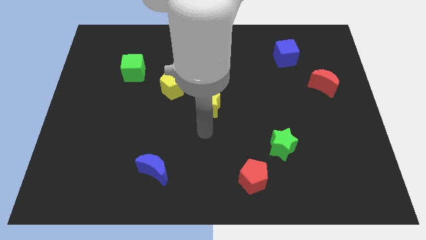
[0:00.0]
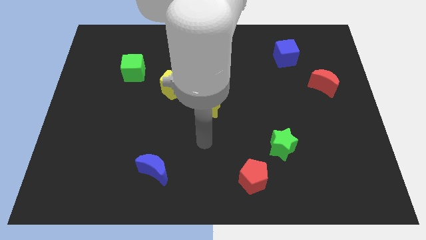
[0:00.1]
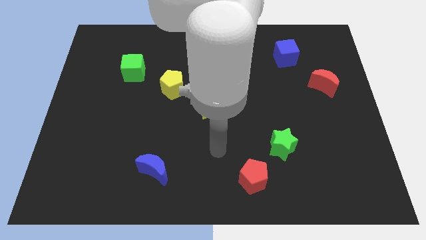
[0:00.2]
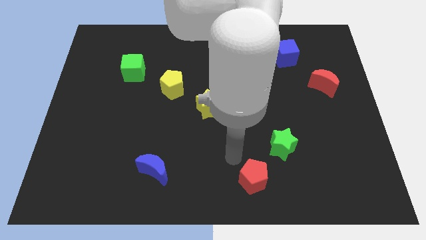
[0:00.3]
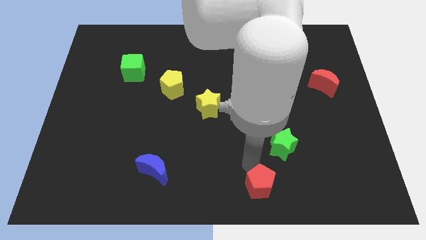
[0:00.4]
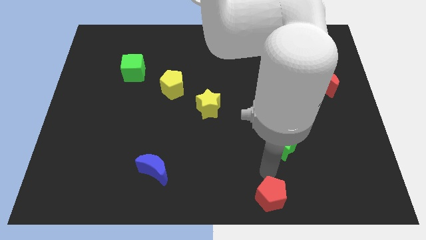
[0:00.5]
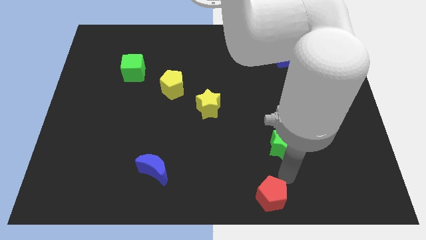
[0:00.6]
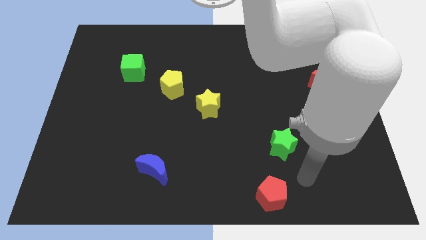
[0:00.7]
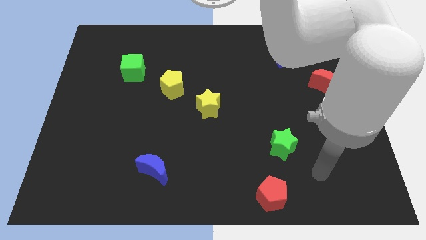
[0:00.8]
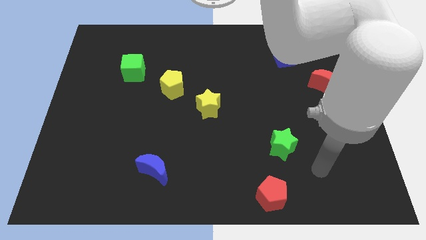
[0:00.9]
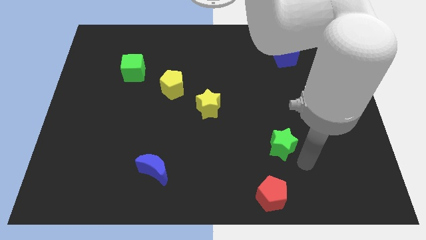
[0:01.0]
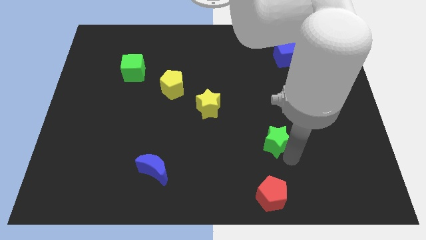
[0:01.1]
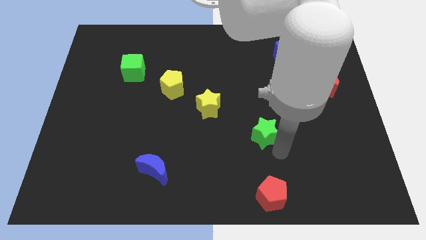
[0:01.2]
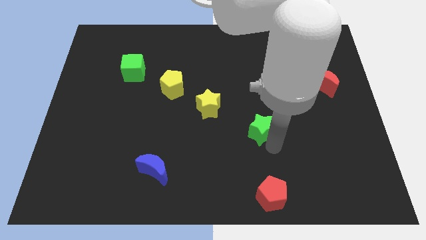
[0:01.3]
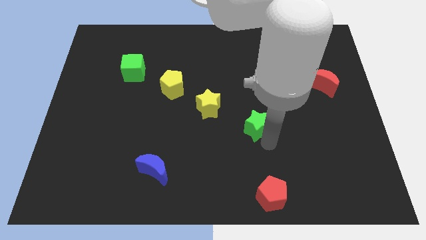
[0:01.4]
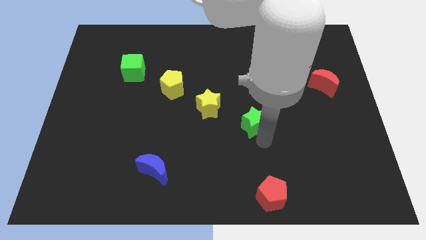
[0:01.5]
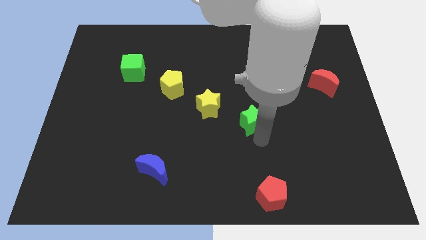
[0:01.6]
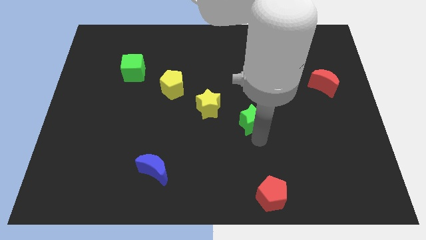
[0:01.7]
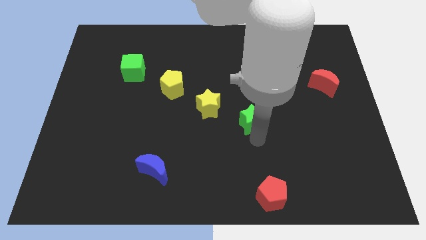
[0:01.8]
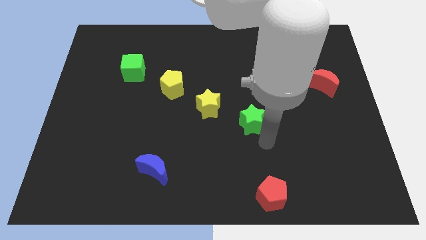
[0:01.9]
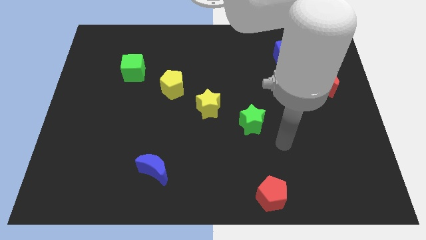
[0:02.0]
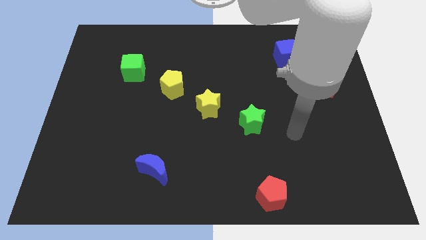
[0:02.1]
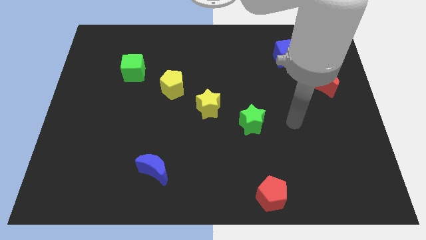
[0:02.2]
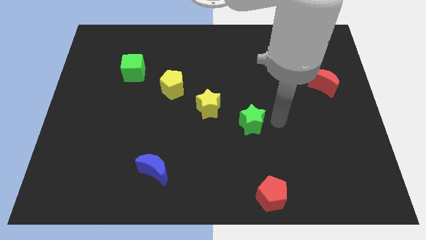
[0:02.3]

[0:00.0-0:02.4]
push the green star towards the yellow star

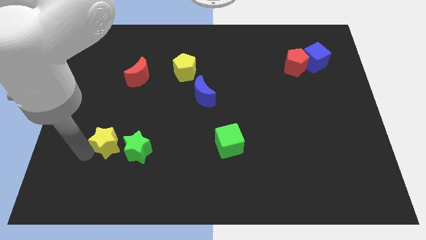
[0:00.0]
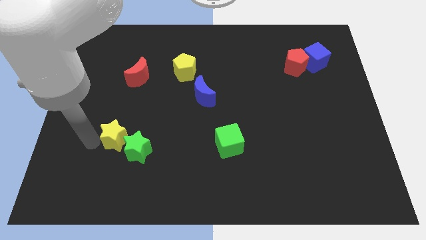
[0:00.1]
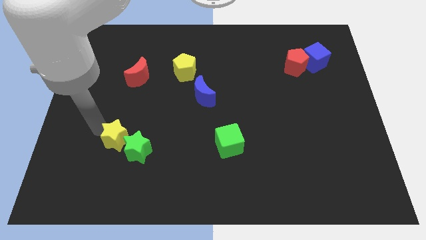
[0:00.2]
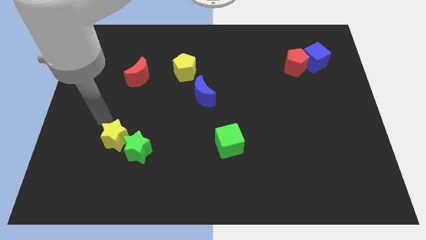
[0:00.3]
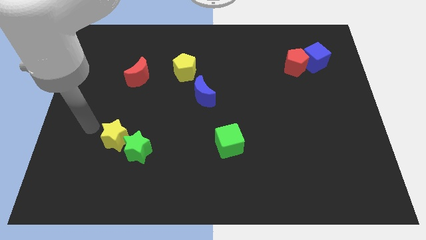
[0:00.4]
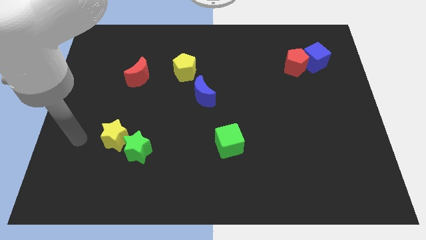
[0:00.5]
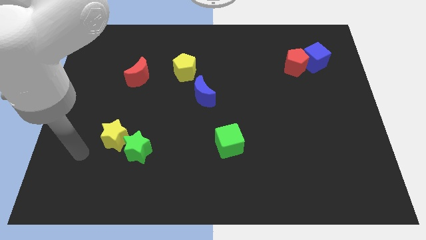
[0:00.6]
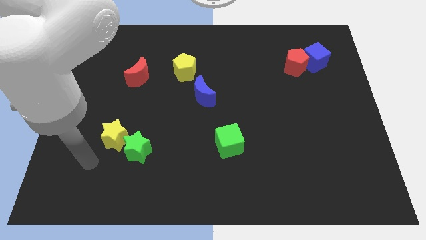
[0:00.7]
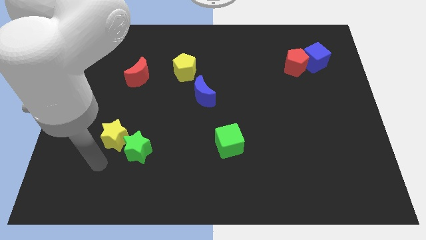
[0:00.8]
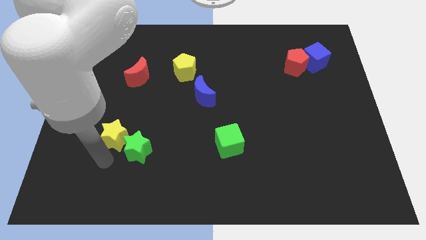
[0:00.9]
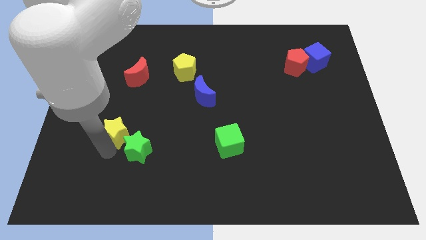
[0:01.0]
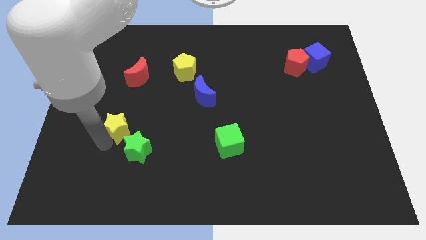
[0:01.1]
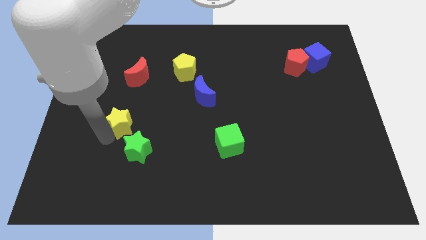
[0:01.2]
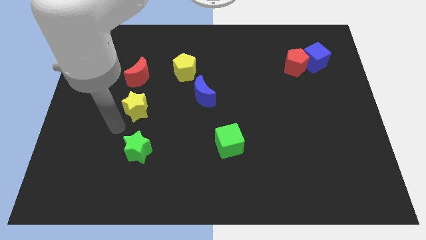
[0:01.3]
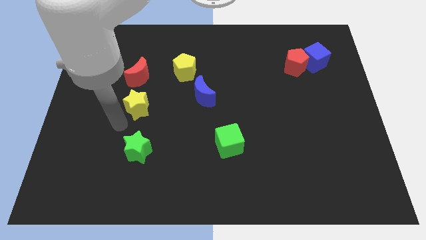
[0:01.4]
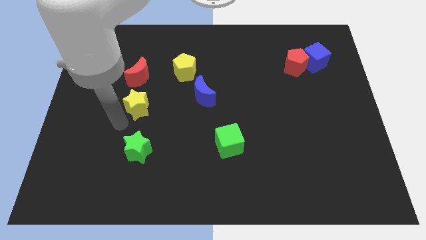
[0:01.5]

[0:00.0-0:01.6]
move the yellow star below the red moon

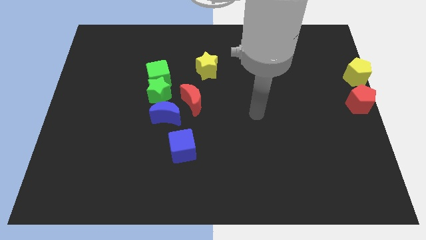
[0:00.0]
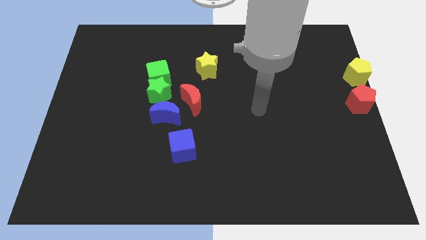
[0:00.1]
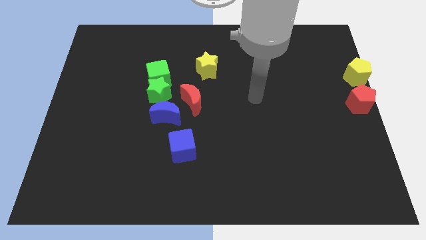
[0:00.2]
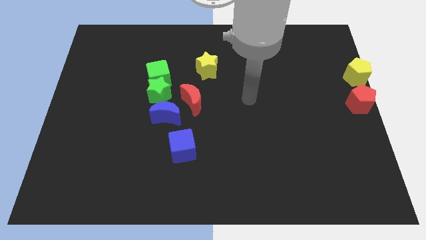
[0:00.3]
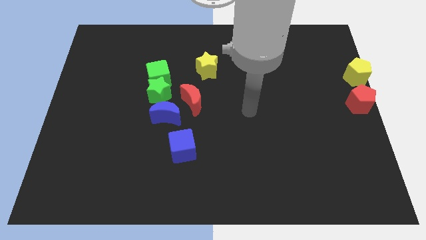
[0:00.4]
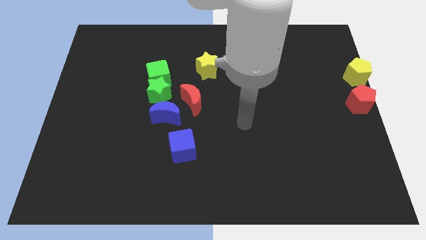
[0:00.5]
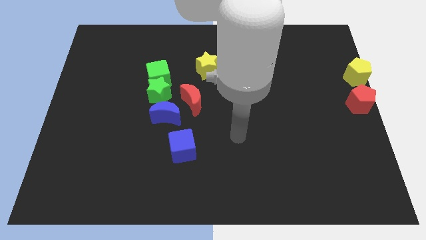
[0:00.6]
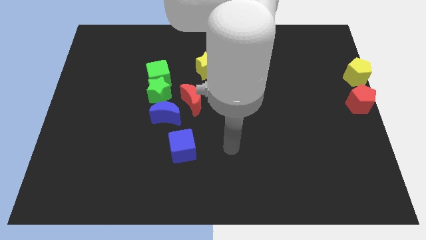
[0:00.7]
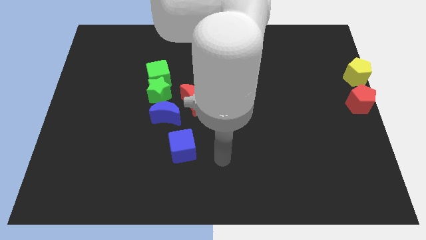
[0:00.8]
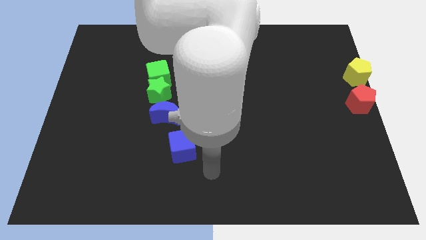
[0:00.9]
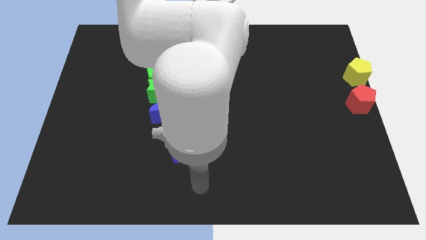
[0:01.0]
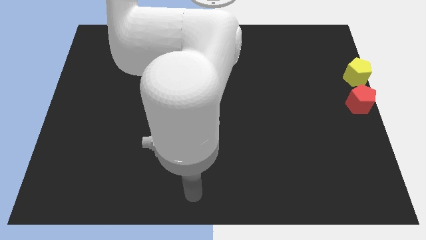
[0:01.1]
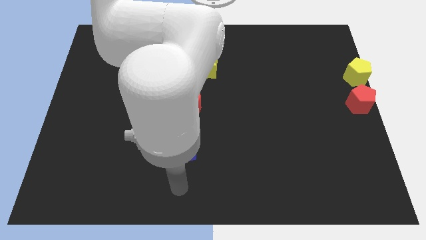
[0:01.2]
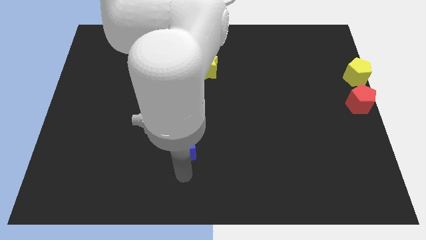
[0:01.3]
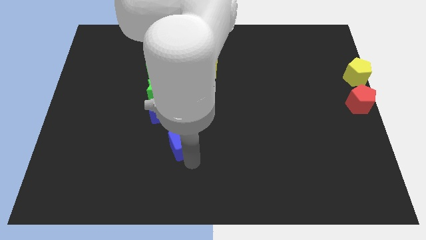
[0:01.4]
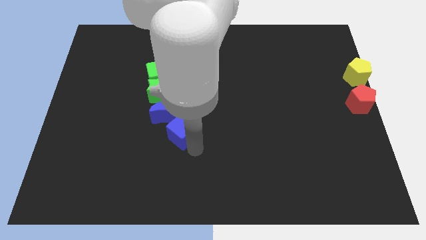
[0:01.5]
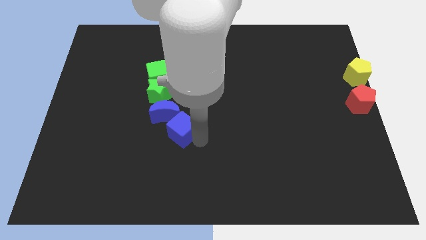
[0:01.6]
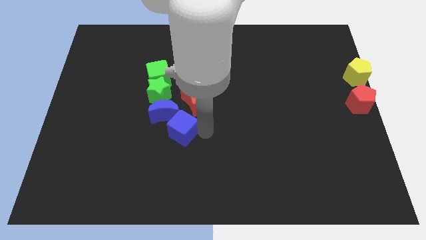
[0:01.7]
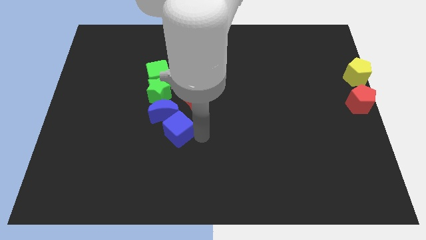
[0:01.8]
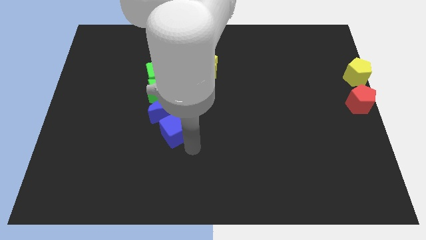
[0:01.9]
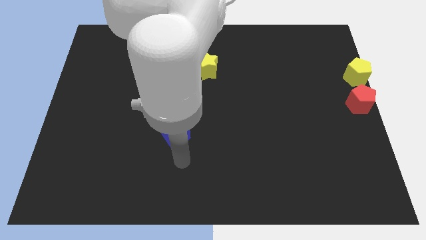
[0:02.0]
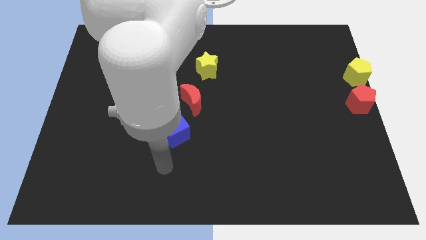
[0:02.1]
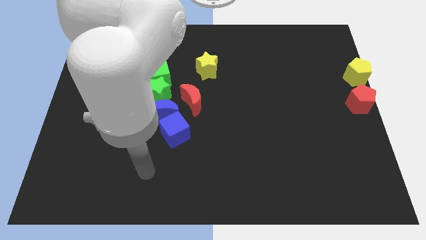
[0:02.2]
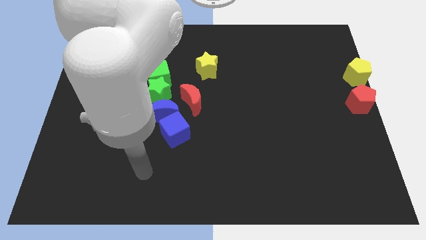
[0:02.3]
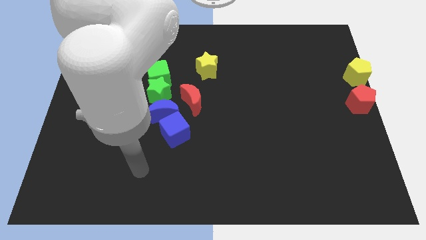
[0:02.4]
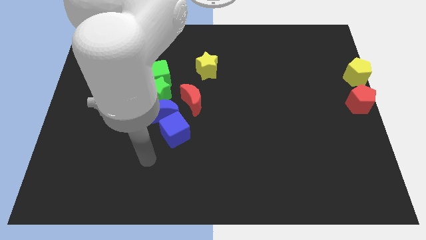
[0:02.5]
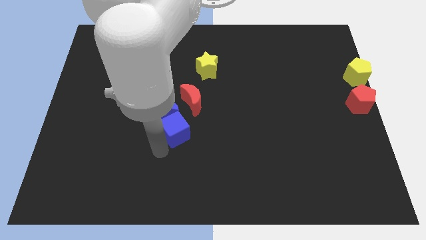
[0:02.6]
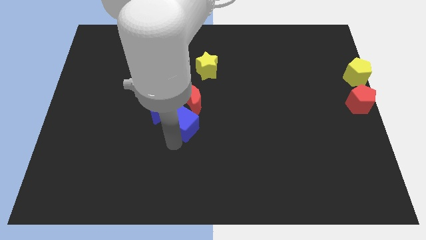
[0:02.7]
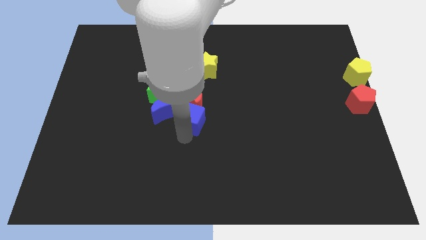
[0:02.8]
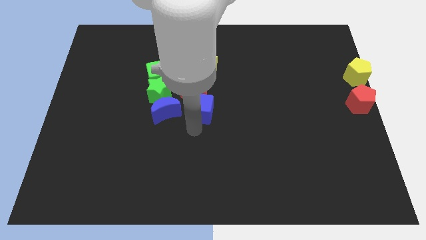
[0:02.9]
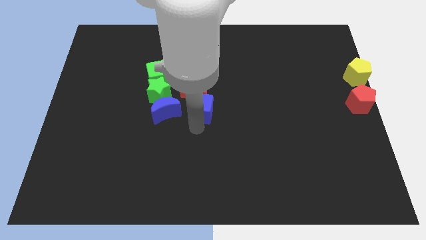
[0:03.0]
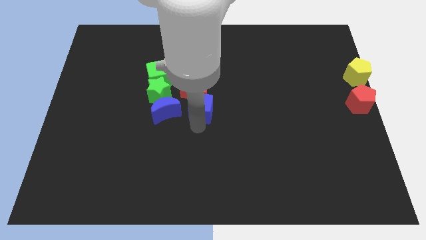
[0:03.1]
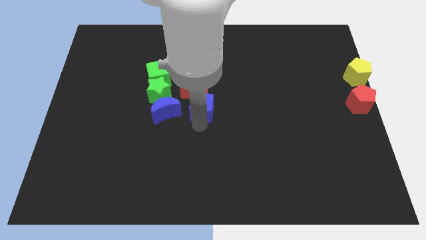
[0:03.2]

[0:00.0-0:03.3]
slide blue cube into the red moon
